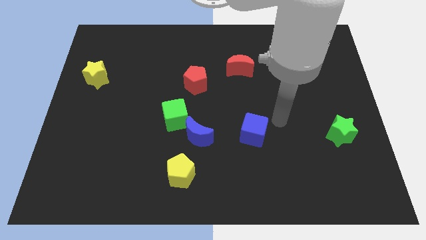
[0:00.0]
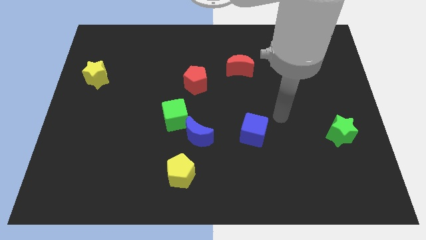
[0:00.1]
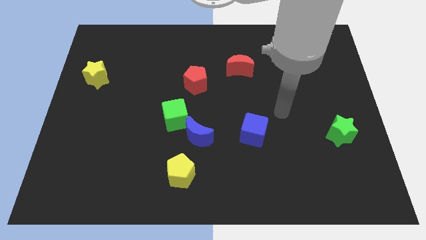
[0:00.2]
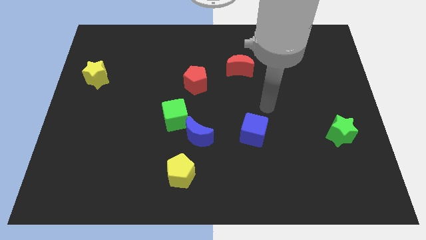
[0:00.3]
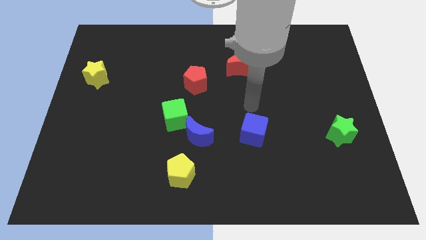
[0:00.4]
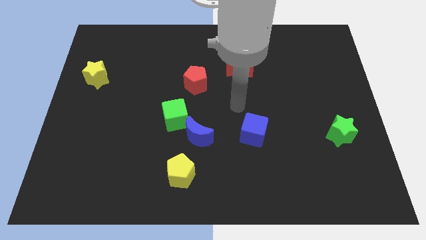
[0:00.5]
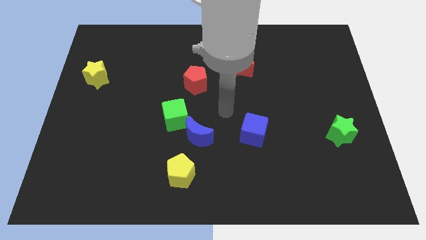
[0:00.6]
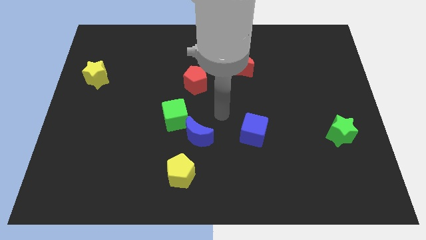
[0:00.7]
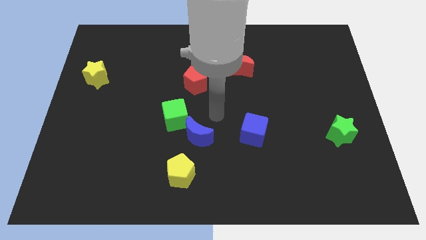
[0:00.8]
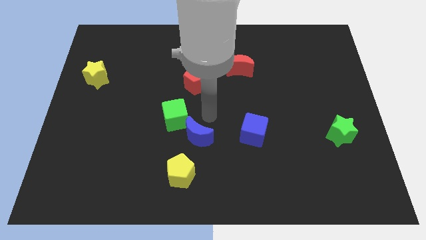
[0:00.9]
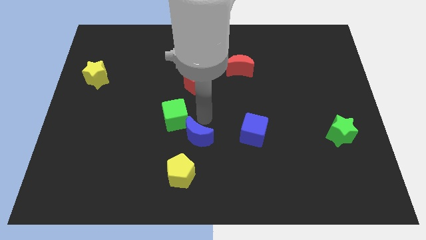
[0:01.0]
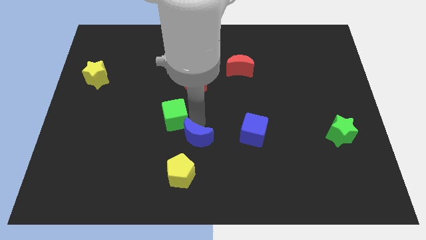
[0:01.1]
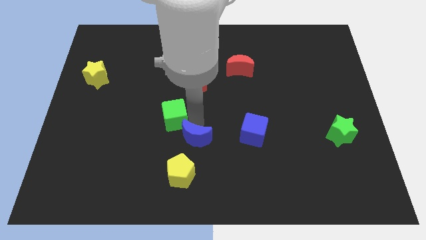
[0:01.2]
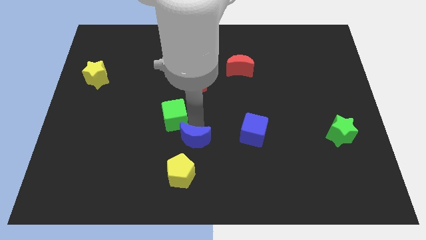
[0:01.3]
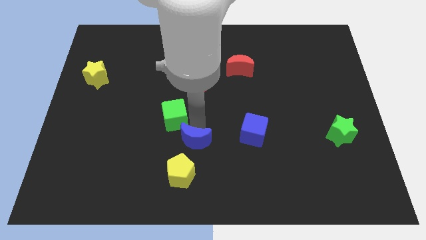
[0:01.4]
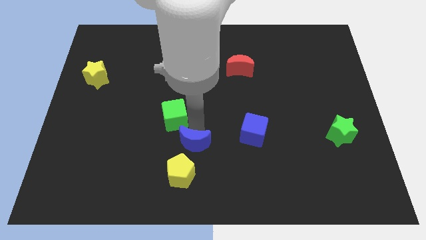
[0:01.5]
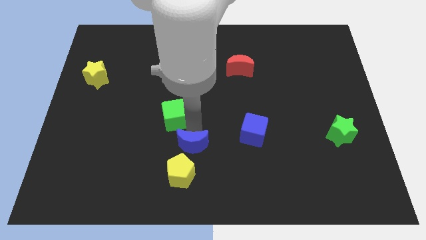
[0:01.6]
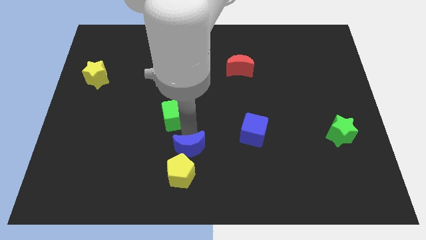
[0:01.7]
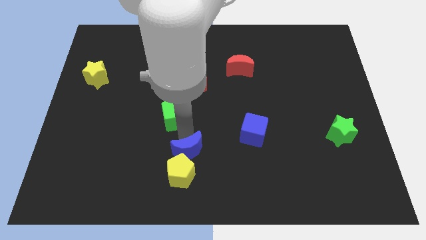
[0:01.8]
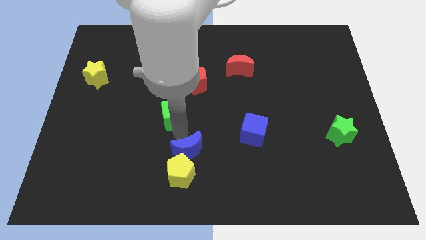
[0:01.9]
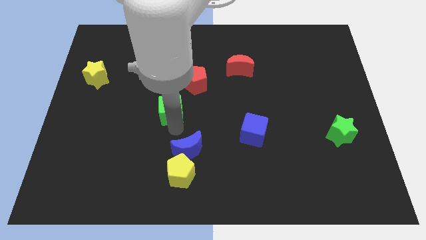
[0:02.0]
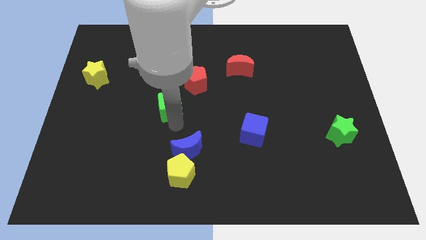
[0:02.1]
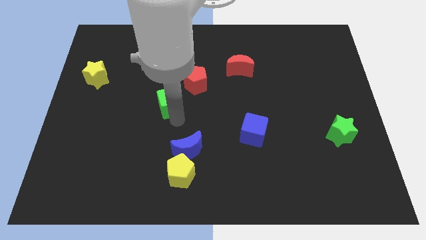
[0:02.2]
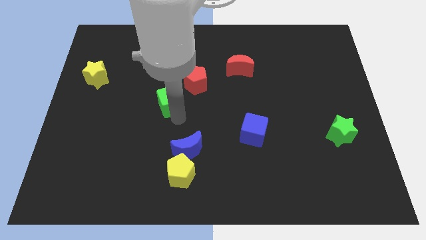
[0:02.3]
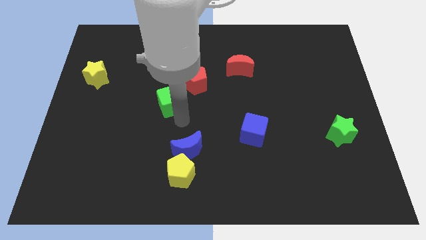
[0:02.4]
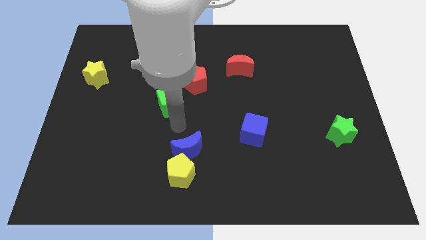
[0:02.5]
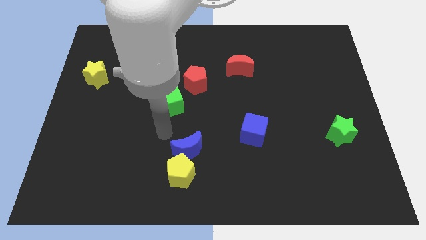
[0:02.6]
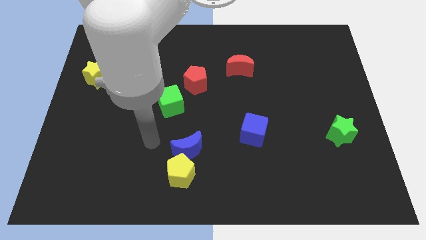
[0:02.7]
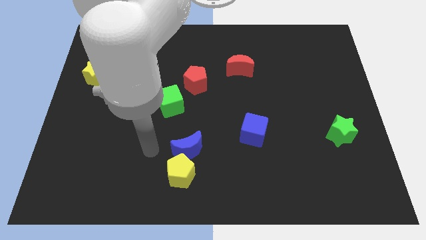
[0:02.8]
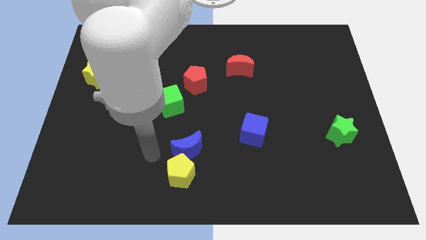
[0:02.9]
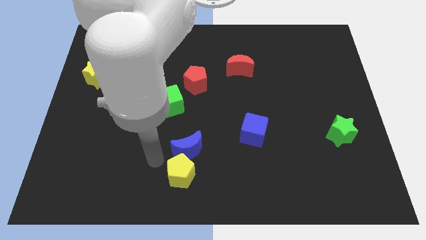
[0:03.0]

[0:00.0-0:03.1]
separate the blue crescent and the green cube

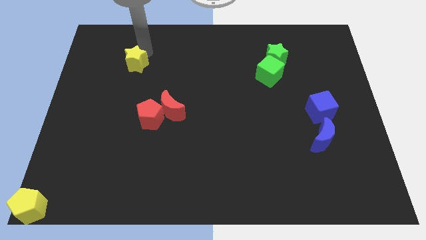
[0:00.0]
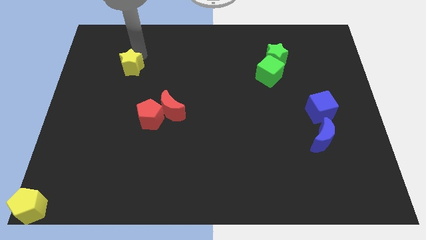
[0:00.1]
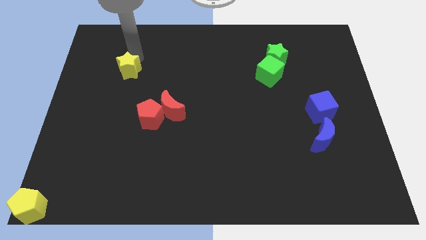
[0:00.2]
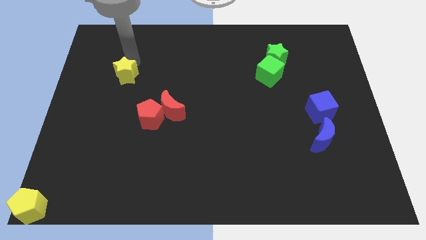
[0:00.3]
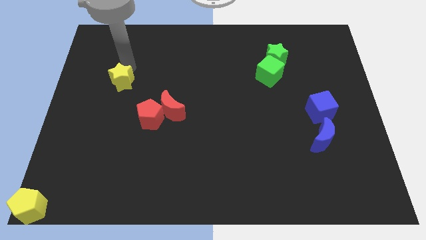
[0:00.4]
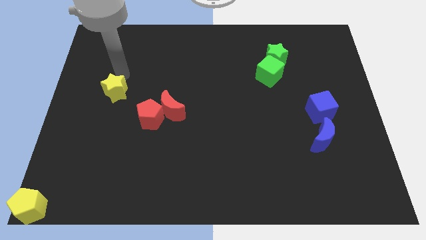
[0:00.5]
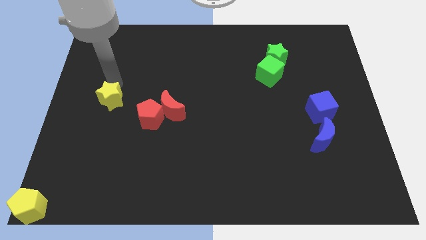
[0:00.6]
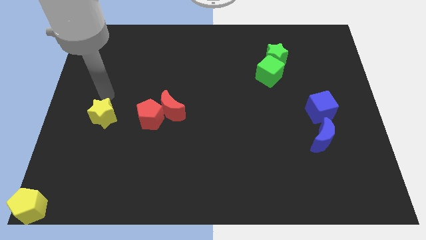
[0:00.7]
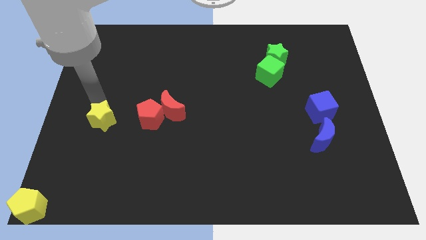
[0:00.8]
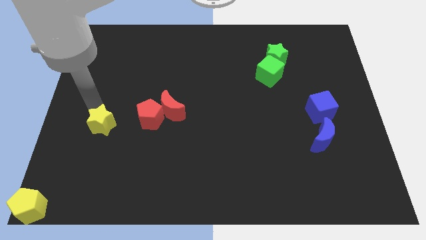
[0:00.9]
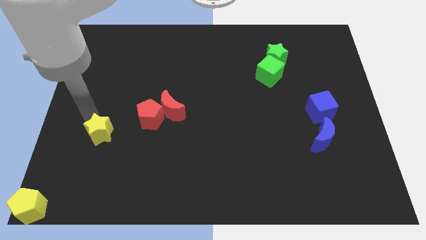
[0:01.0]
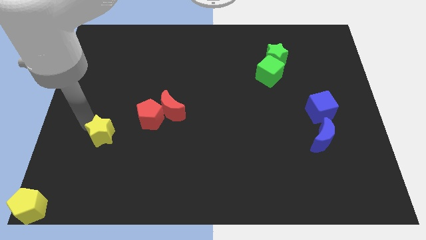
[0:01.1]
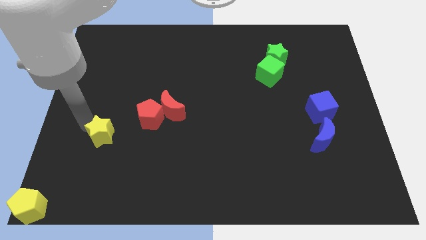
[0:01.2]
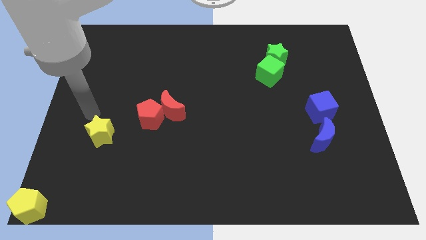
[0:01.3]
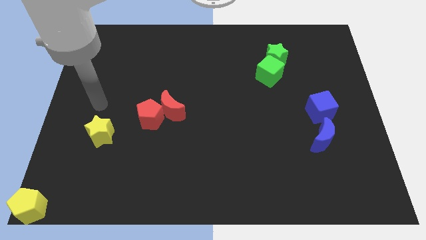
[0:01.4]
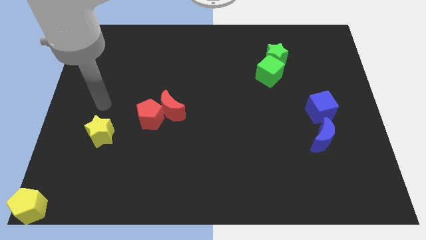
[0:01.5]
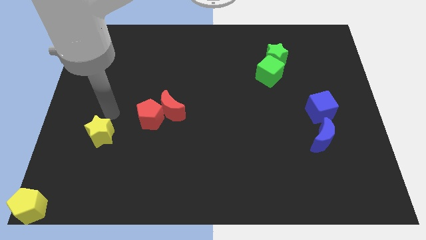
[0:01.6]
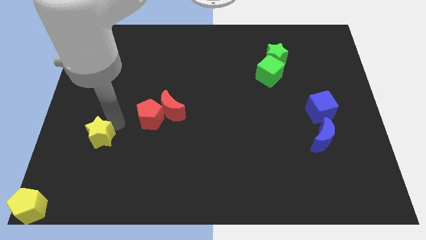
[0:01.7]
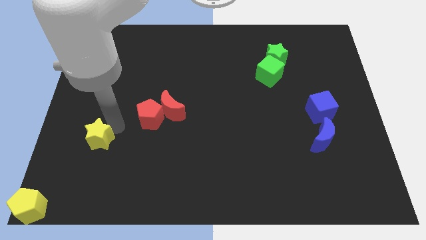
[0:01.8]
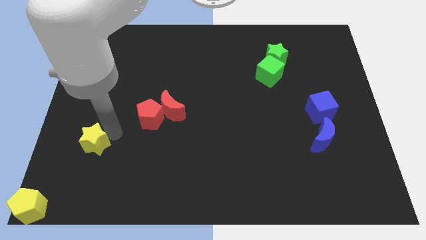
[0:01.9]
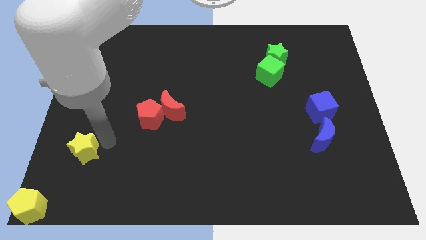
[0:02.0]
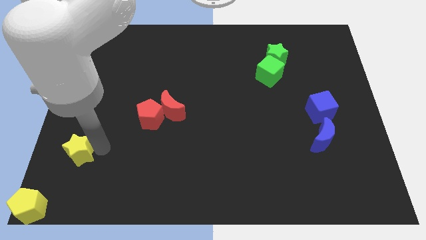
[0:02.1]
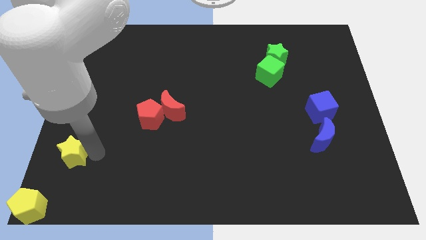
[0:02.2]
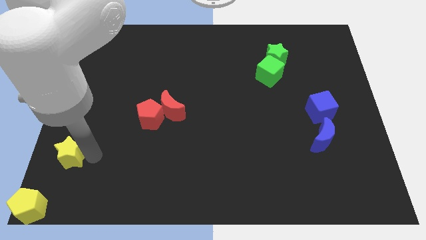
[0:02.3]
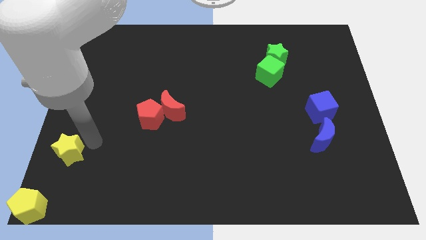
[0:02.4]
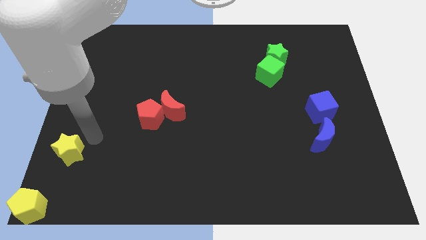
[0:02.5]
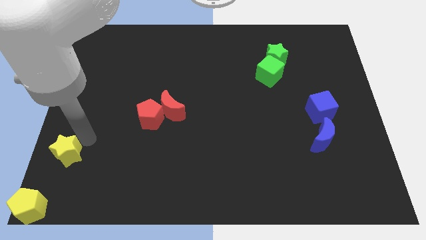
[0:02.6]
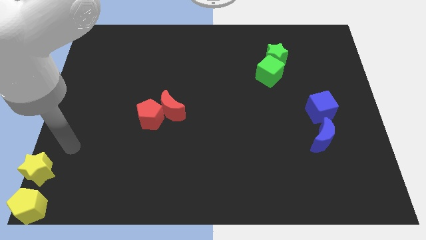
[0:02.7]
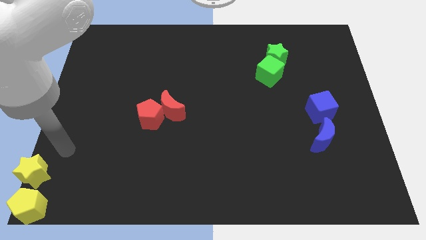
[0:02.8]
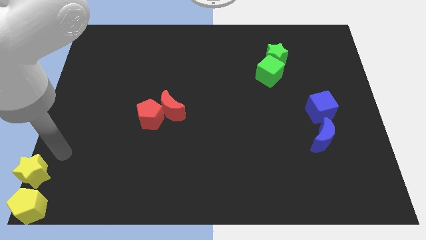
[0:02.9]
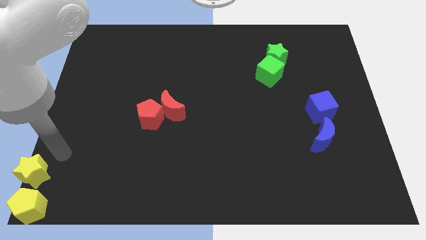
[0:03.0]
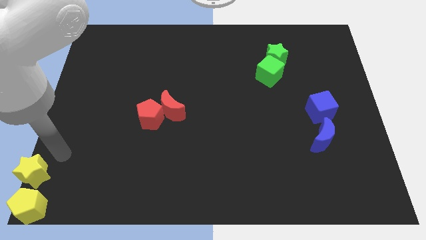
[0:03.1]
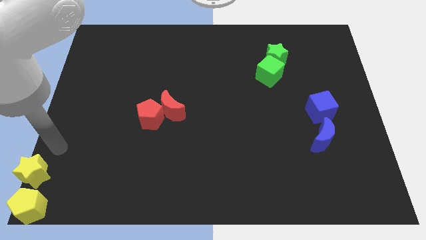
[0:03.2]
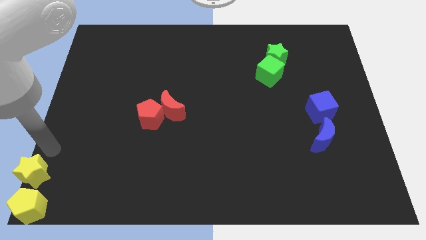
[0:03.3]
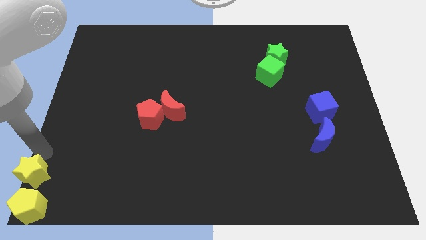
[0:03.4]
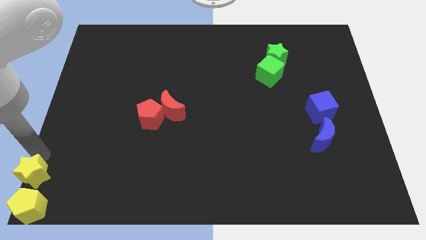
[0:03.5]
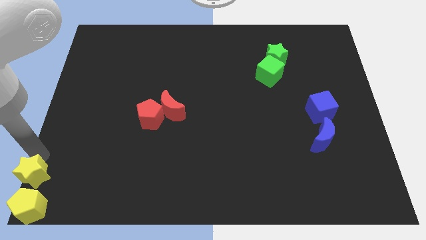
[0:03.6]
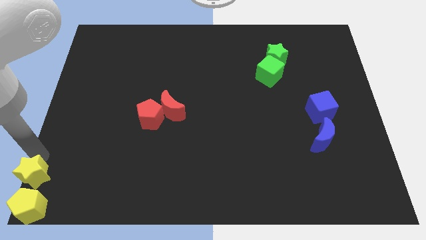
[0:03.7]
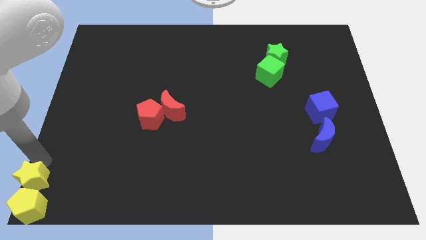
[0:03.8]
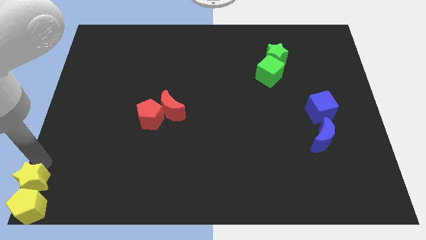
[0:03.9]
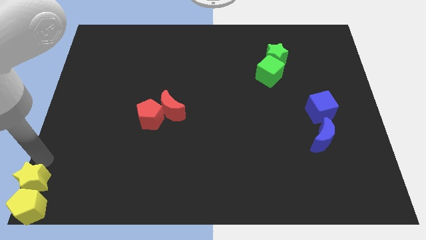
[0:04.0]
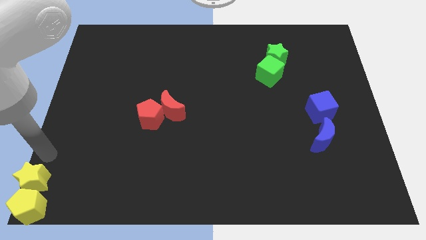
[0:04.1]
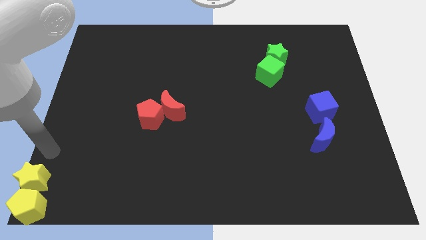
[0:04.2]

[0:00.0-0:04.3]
place the yellow star above the yellow pentagon

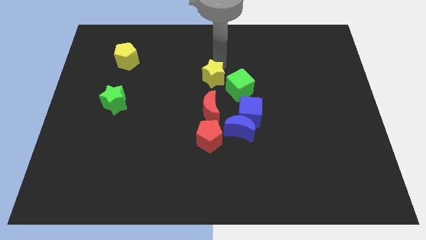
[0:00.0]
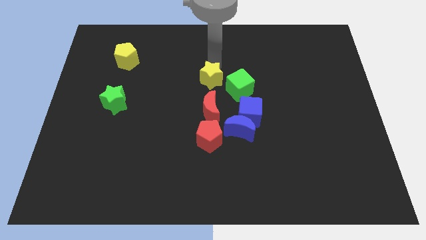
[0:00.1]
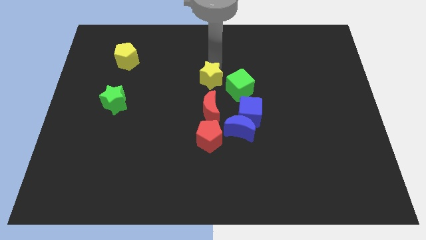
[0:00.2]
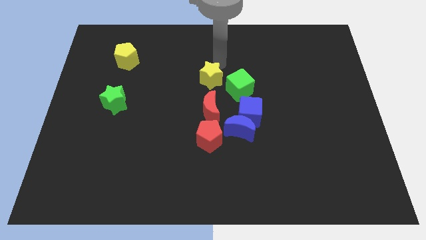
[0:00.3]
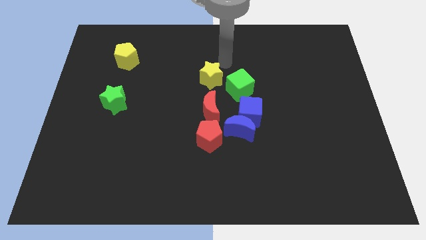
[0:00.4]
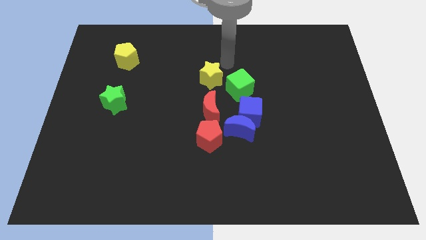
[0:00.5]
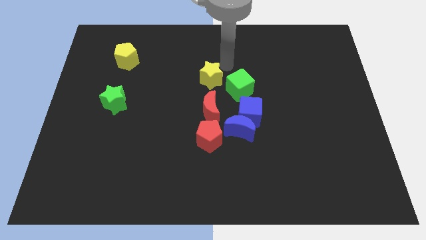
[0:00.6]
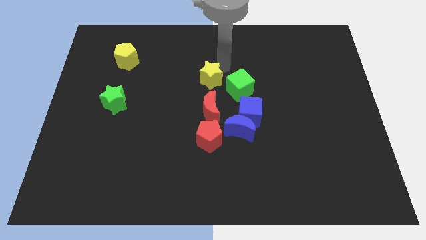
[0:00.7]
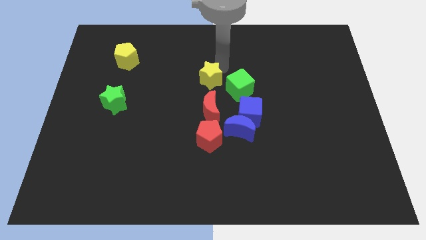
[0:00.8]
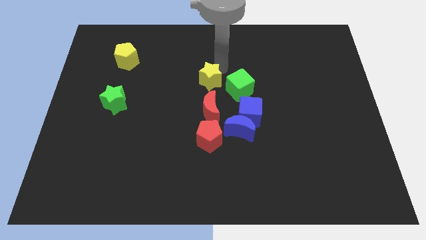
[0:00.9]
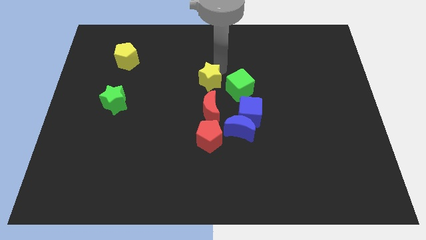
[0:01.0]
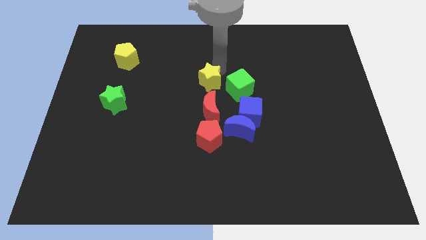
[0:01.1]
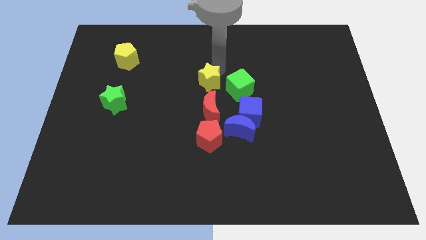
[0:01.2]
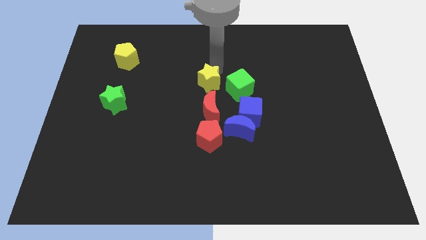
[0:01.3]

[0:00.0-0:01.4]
place yellow star to the top of red moon

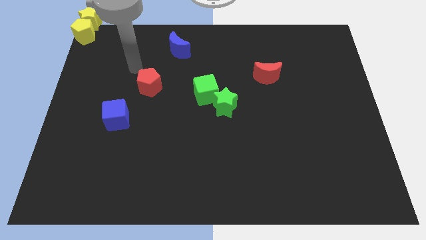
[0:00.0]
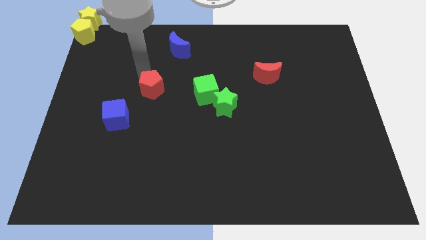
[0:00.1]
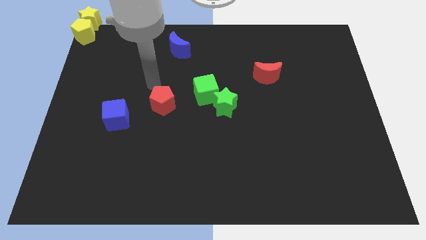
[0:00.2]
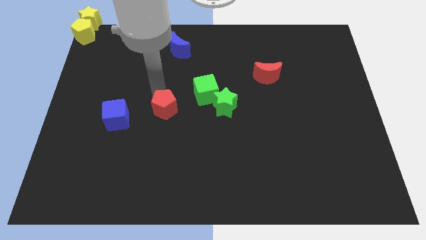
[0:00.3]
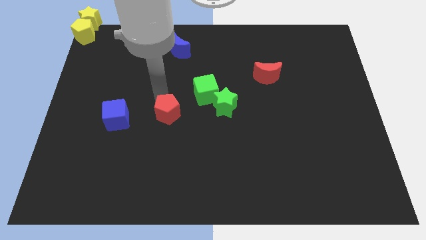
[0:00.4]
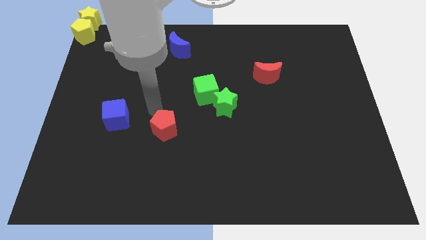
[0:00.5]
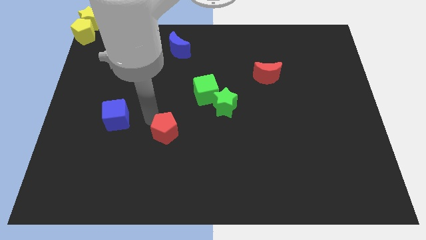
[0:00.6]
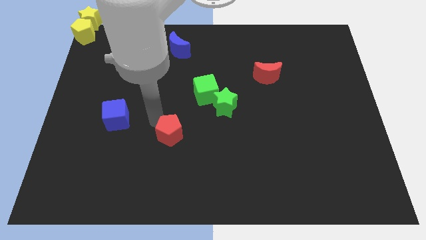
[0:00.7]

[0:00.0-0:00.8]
push the red pentagon parallel to the bottom left of the green star
